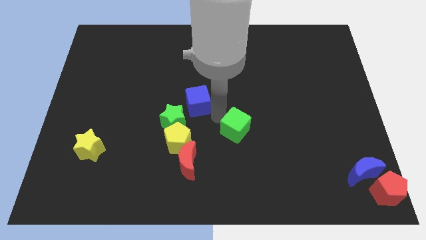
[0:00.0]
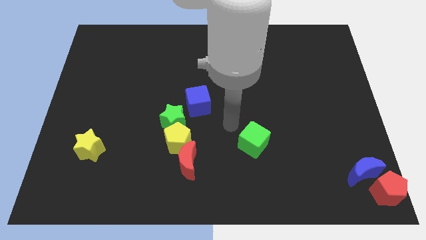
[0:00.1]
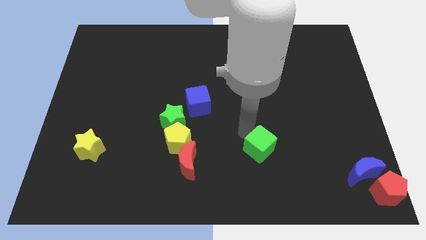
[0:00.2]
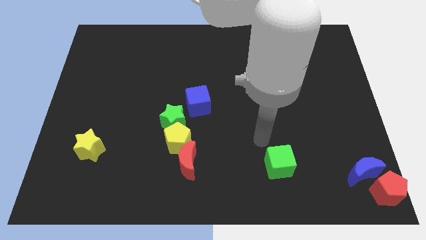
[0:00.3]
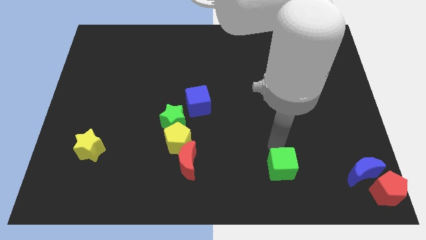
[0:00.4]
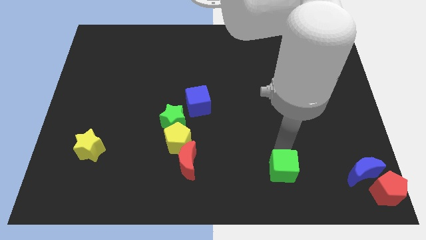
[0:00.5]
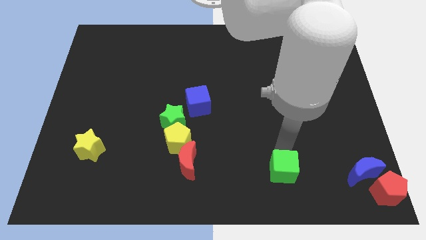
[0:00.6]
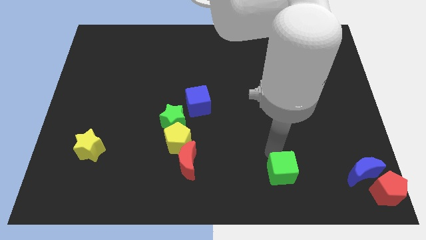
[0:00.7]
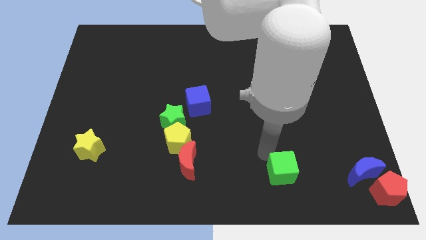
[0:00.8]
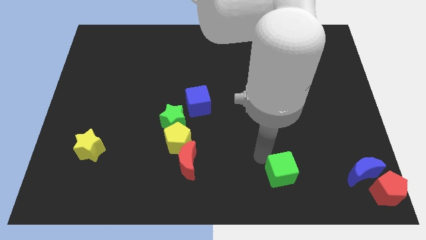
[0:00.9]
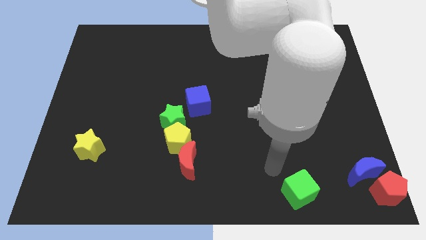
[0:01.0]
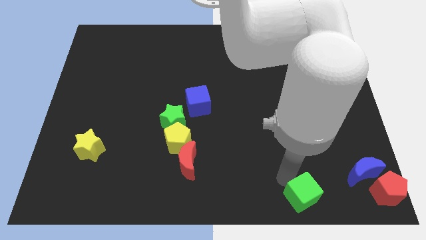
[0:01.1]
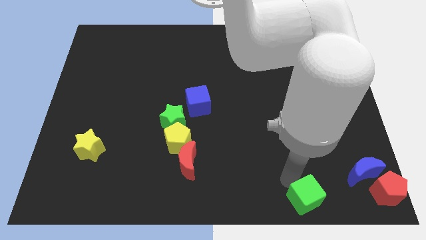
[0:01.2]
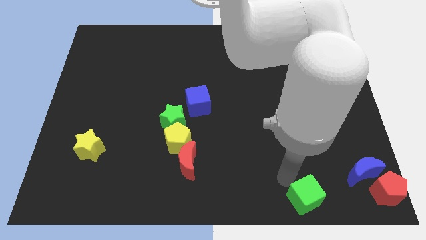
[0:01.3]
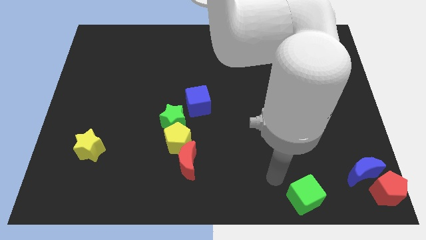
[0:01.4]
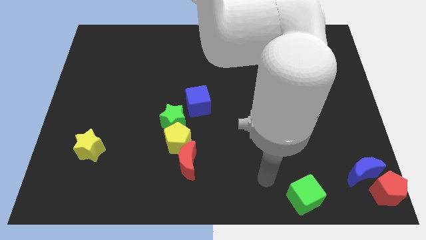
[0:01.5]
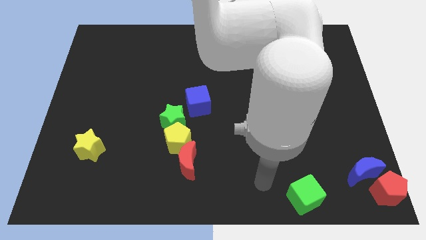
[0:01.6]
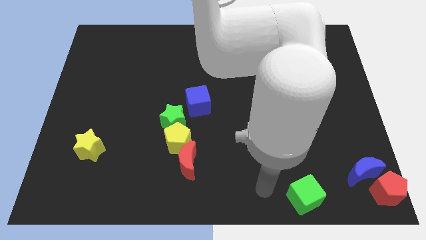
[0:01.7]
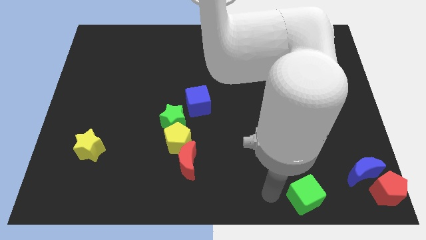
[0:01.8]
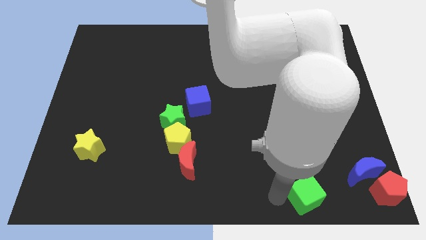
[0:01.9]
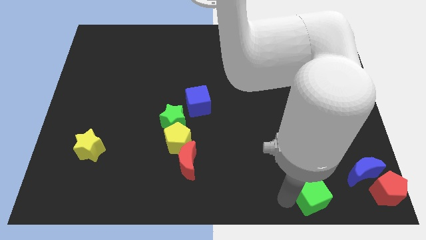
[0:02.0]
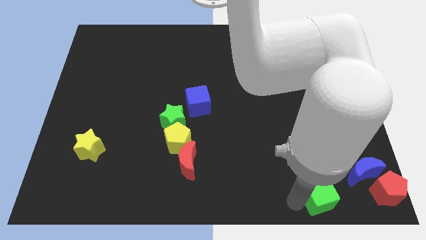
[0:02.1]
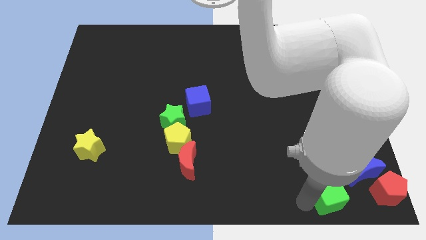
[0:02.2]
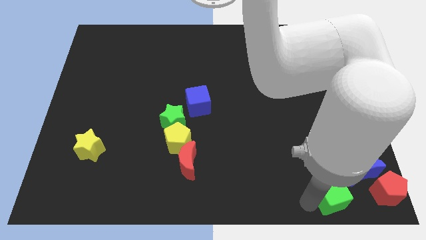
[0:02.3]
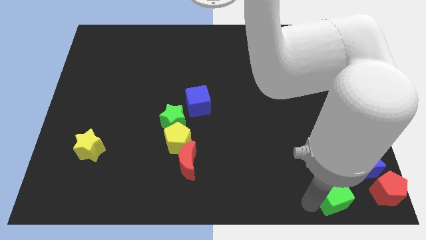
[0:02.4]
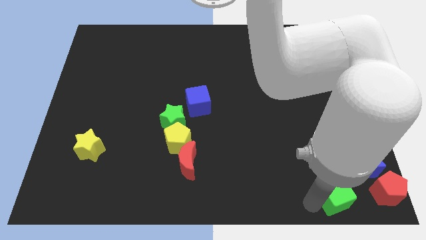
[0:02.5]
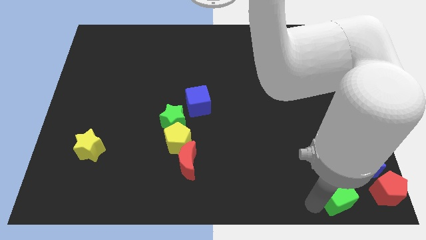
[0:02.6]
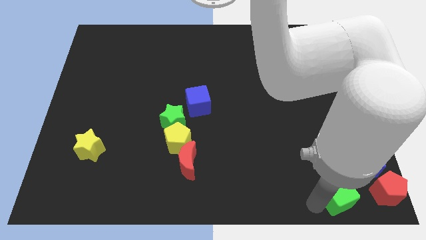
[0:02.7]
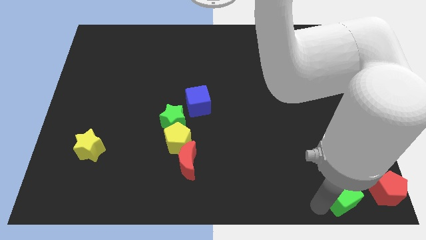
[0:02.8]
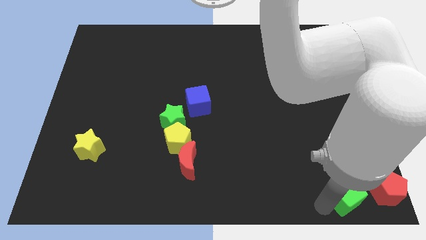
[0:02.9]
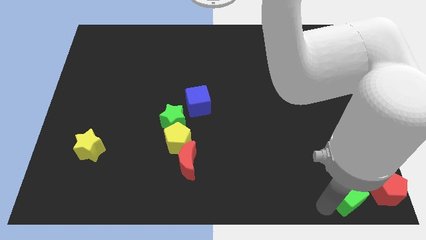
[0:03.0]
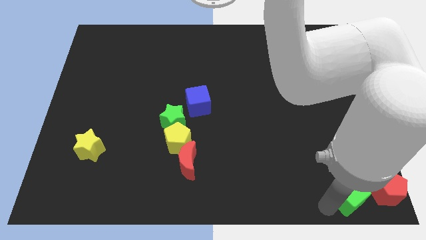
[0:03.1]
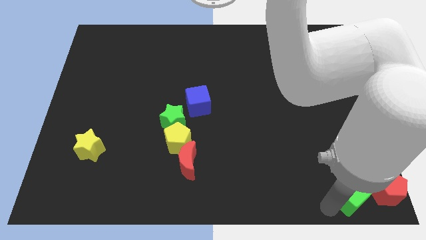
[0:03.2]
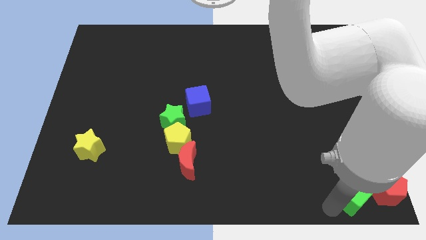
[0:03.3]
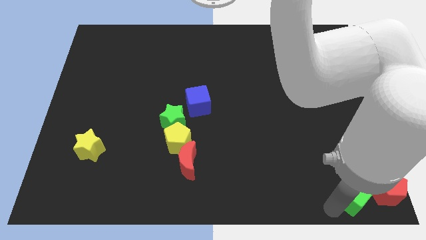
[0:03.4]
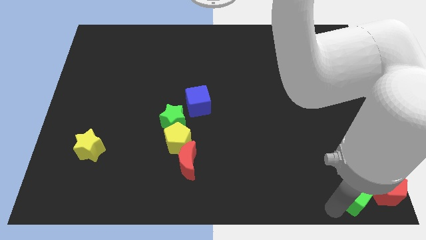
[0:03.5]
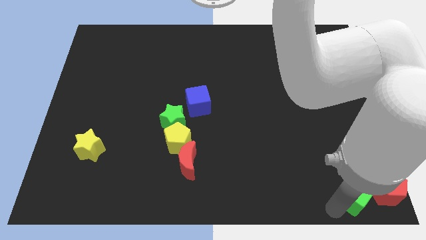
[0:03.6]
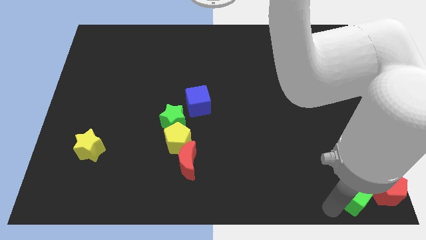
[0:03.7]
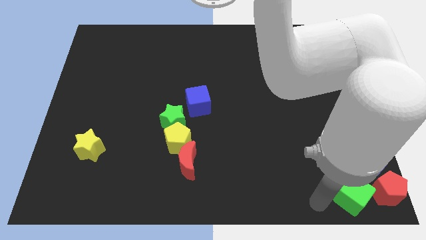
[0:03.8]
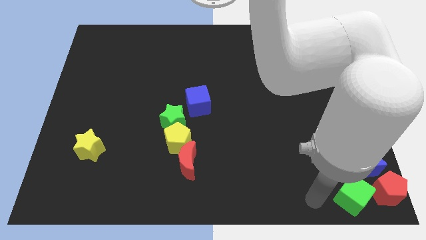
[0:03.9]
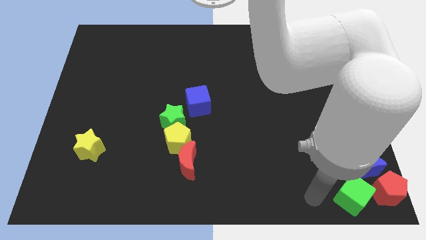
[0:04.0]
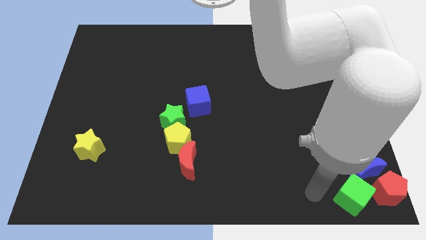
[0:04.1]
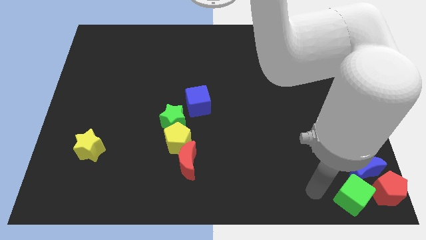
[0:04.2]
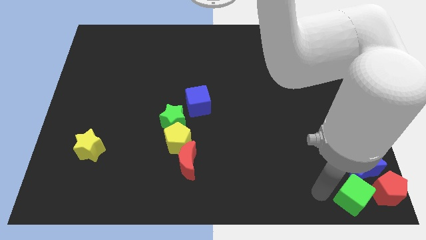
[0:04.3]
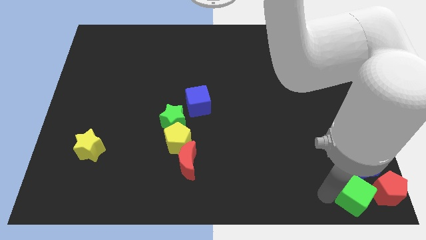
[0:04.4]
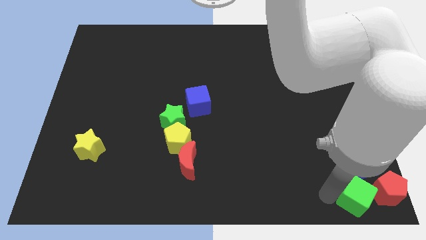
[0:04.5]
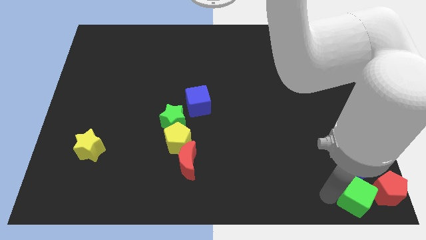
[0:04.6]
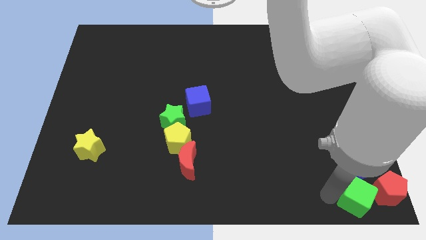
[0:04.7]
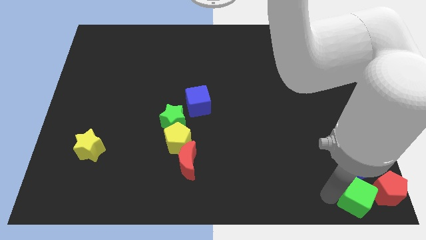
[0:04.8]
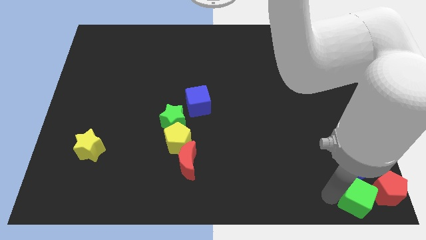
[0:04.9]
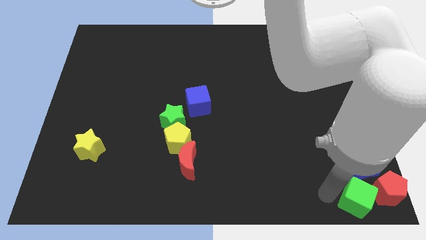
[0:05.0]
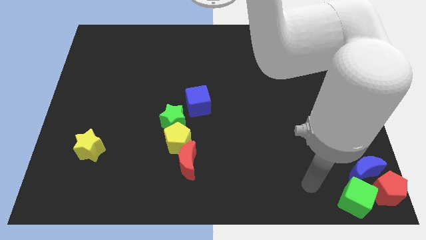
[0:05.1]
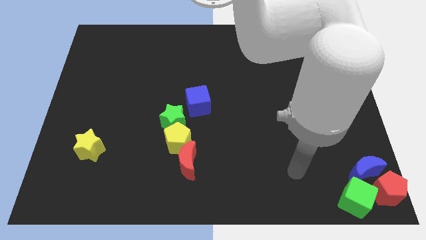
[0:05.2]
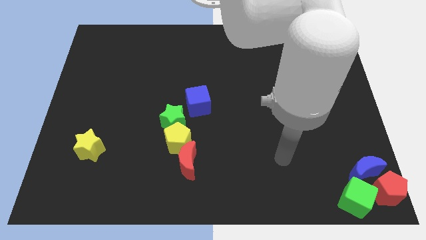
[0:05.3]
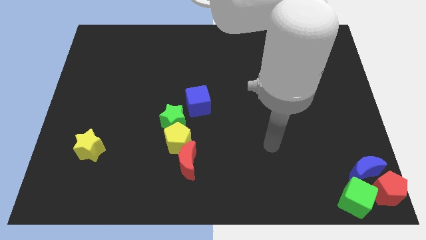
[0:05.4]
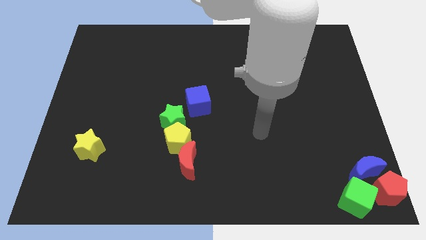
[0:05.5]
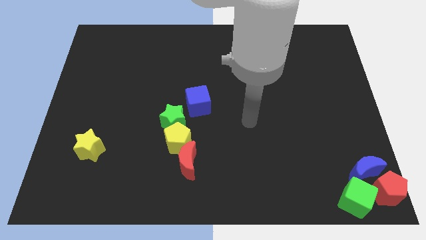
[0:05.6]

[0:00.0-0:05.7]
push the green cube to the bottom right corner of the board

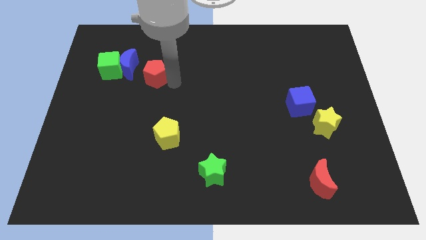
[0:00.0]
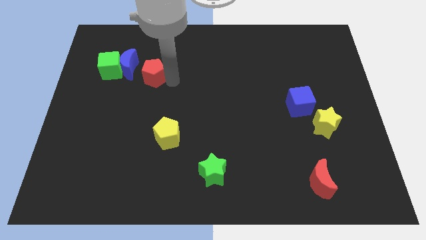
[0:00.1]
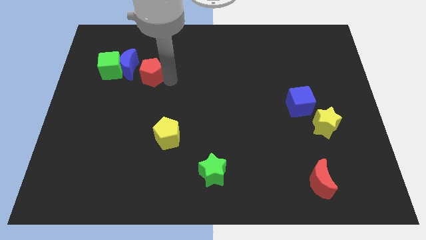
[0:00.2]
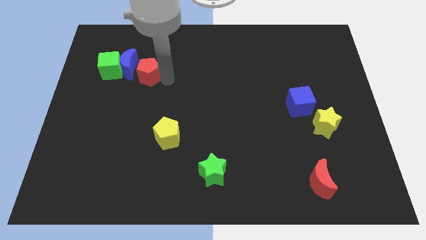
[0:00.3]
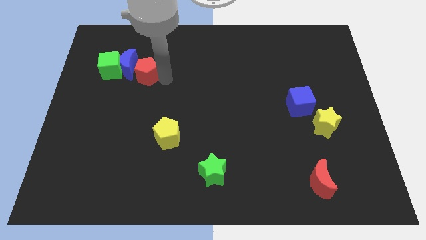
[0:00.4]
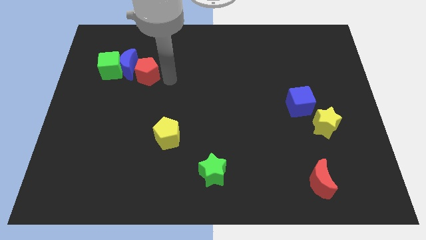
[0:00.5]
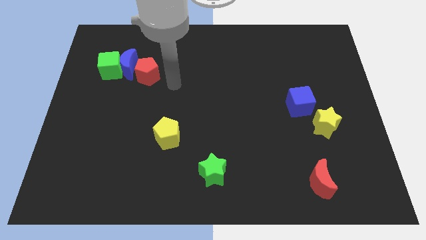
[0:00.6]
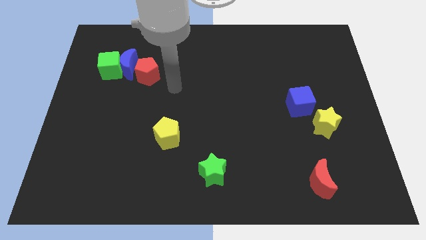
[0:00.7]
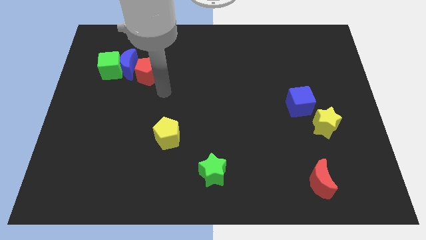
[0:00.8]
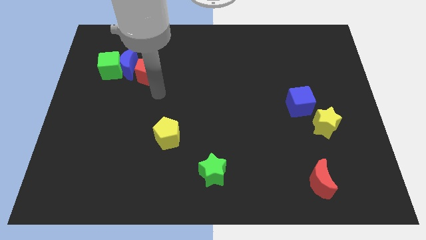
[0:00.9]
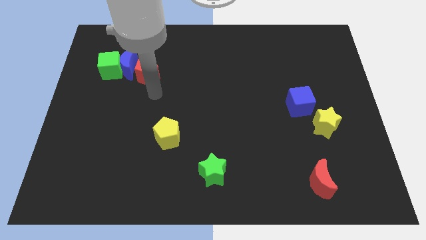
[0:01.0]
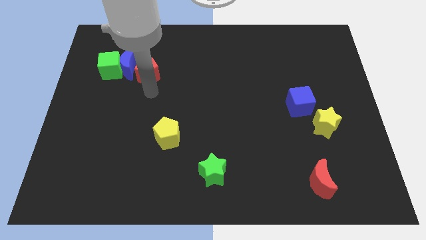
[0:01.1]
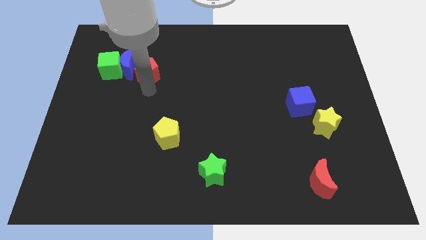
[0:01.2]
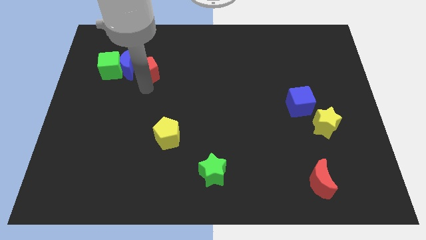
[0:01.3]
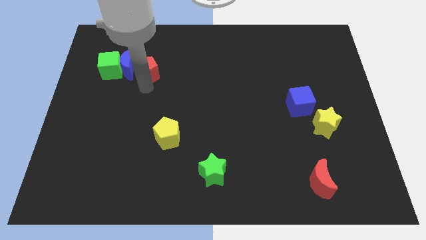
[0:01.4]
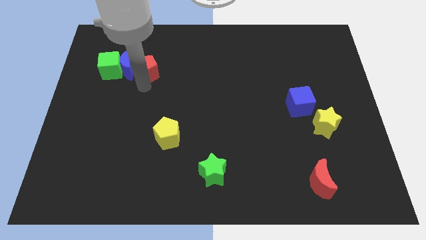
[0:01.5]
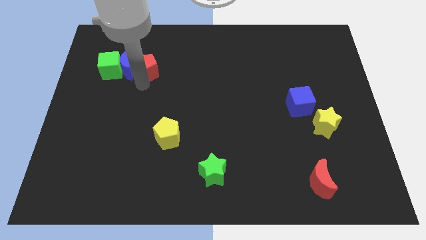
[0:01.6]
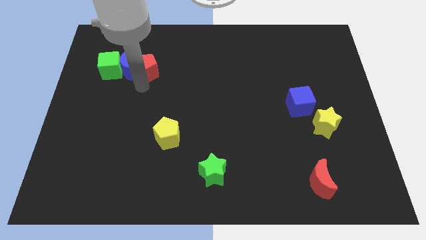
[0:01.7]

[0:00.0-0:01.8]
move the red pentagon right to the blue crescent

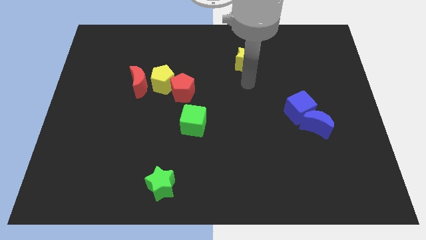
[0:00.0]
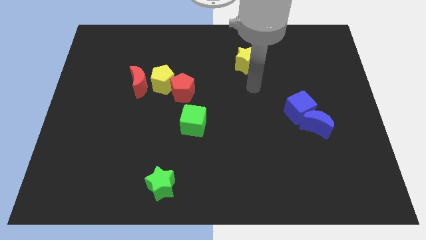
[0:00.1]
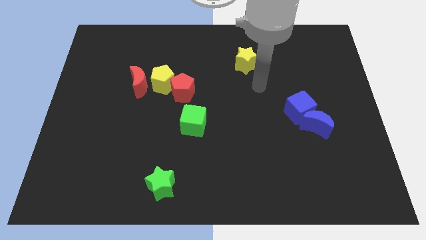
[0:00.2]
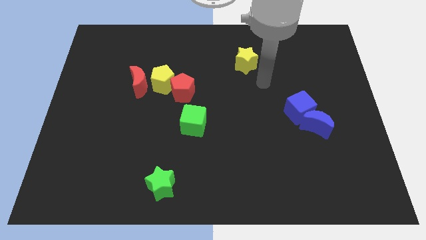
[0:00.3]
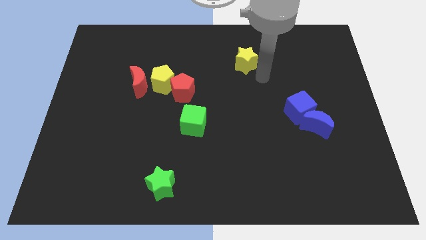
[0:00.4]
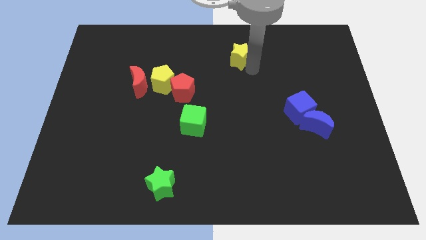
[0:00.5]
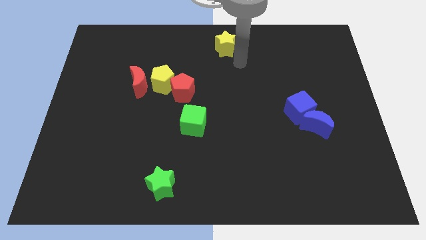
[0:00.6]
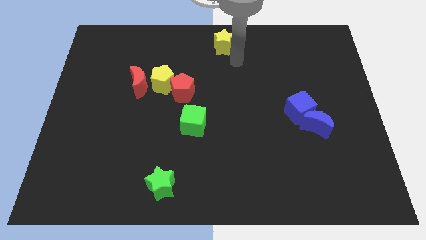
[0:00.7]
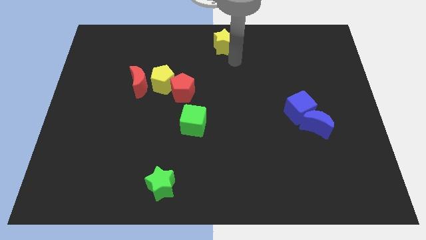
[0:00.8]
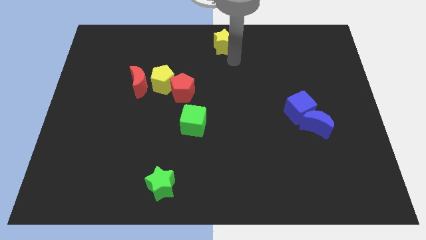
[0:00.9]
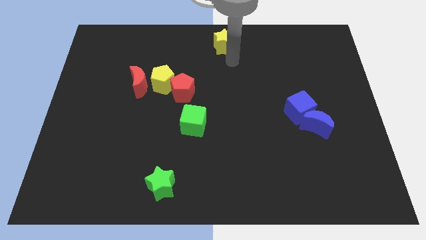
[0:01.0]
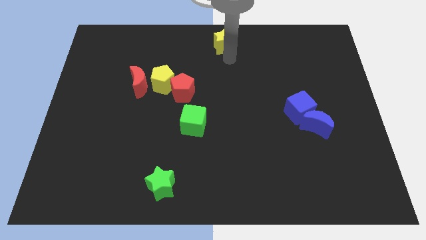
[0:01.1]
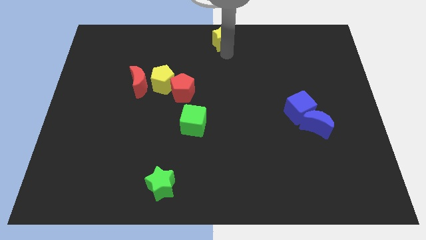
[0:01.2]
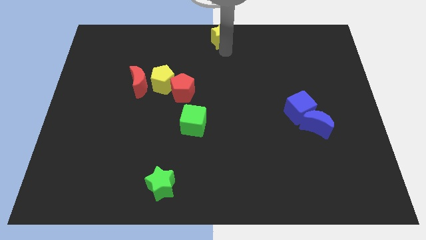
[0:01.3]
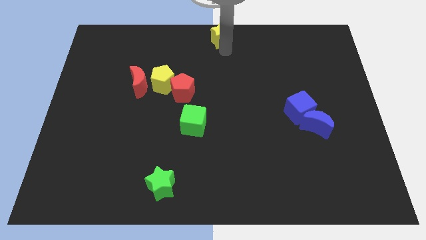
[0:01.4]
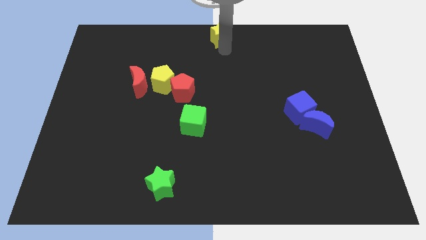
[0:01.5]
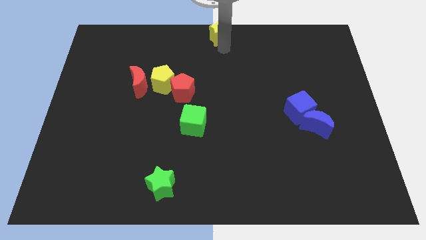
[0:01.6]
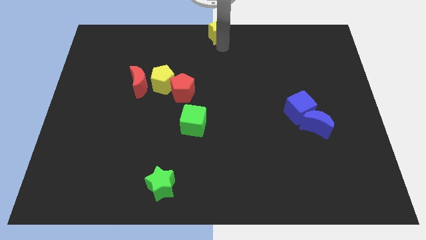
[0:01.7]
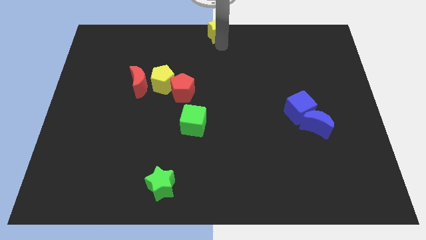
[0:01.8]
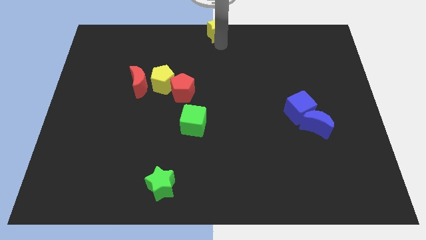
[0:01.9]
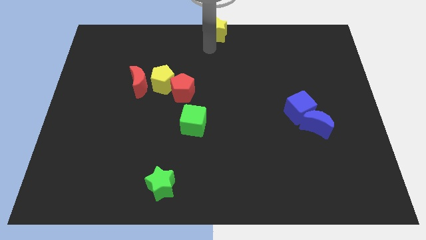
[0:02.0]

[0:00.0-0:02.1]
place the yellow star at the top center
